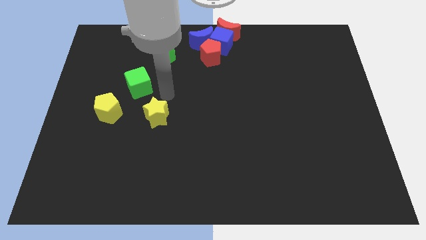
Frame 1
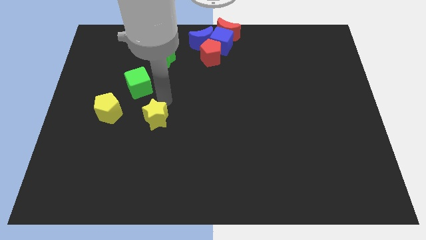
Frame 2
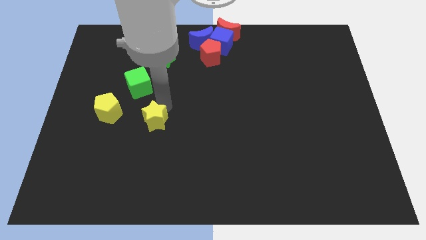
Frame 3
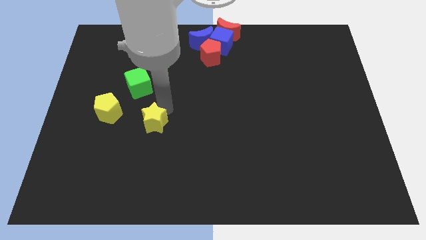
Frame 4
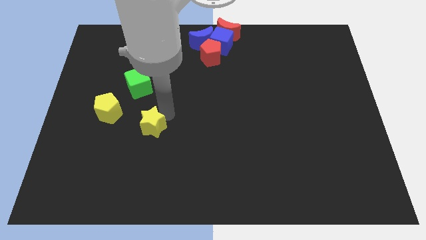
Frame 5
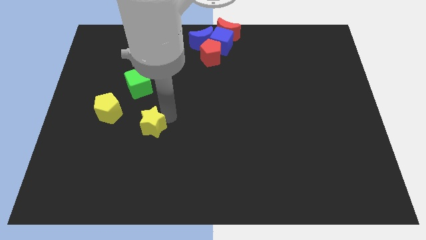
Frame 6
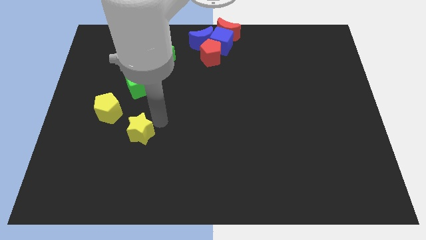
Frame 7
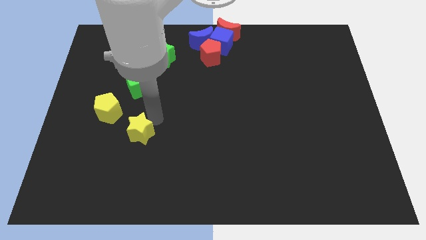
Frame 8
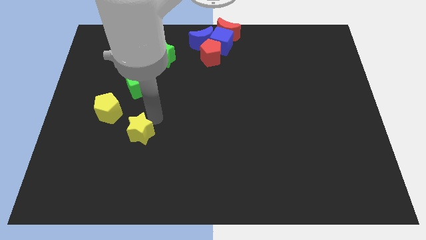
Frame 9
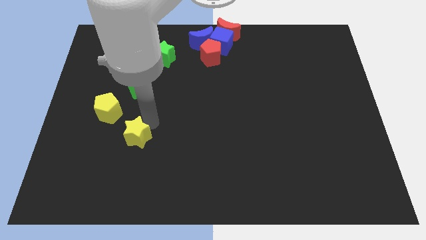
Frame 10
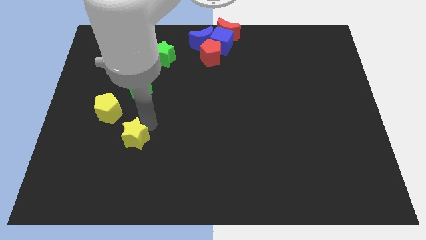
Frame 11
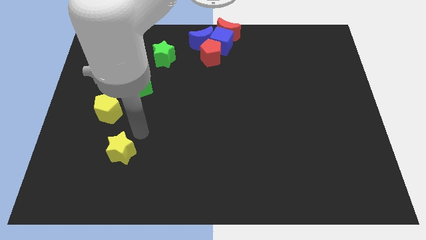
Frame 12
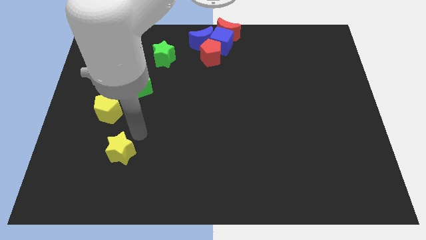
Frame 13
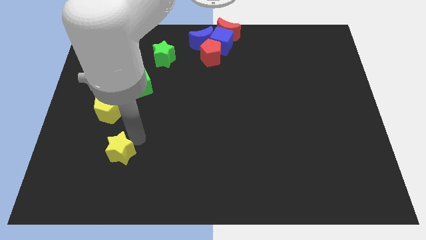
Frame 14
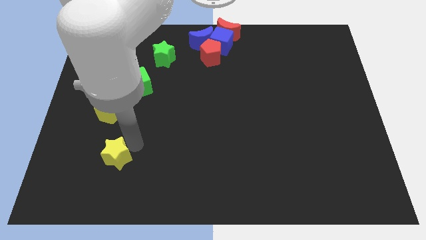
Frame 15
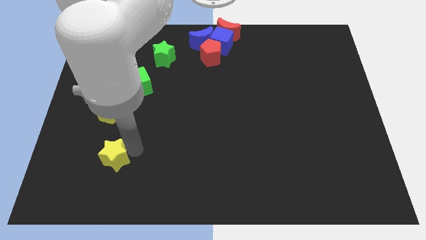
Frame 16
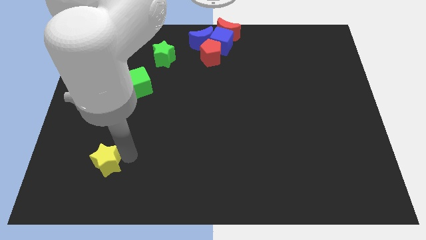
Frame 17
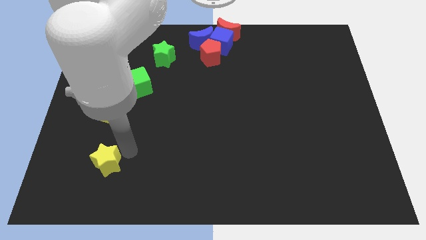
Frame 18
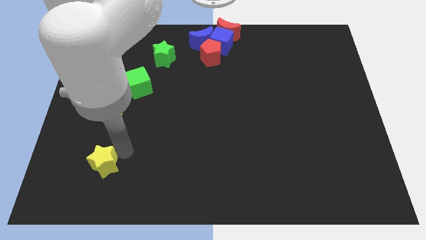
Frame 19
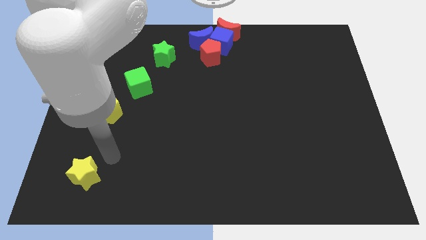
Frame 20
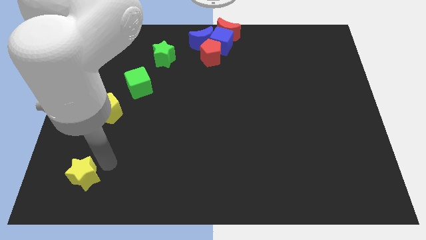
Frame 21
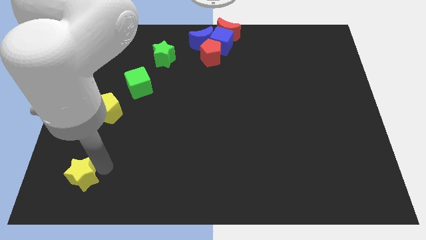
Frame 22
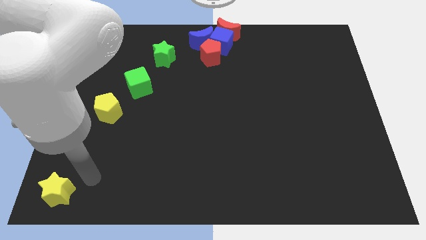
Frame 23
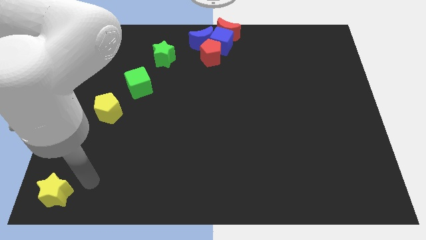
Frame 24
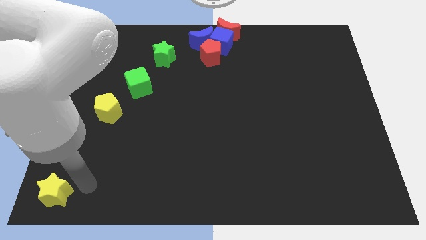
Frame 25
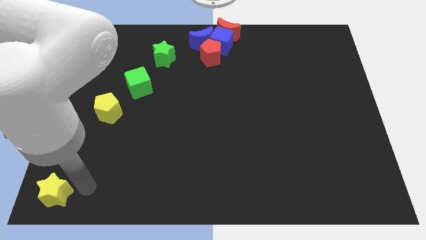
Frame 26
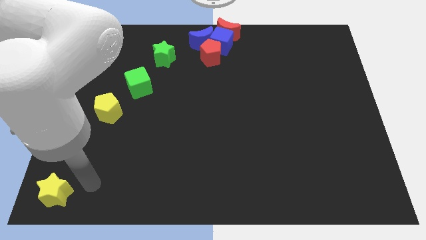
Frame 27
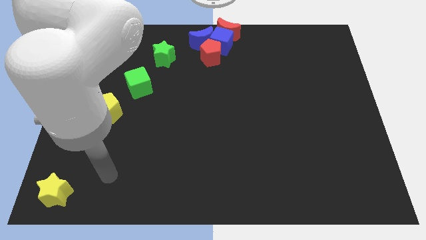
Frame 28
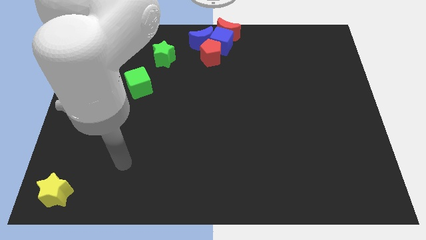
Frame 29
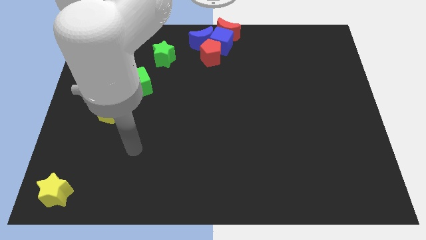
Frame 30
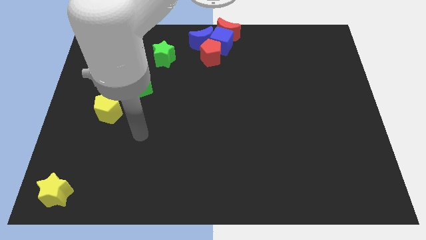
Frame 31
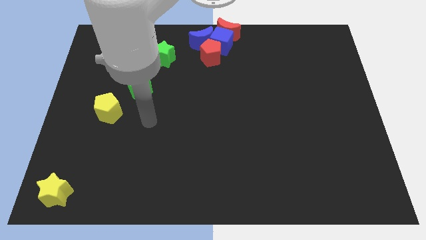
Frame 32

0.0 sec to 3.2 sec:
push the yellopw star at the bottom left side of the table

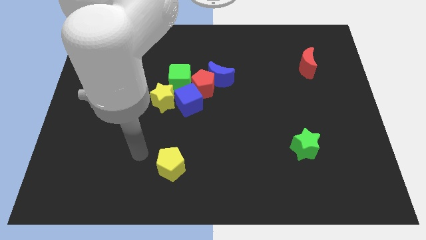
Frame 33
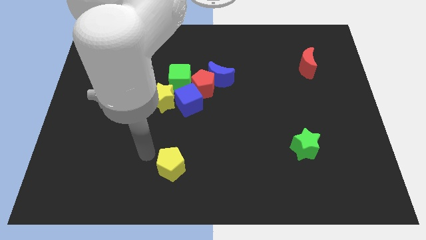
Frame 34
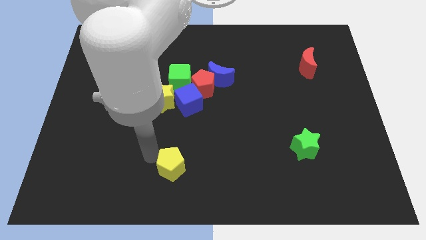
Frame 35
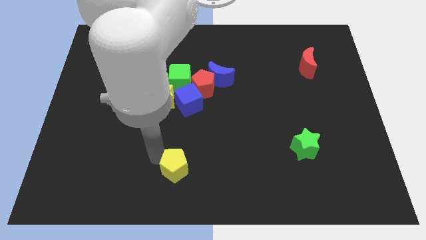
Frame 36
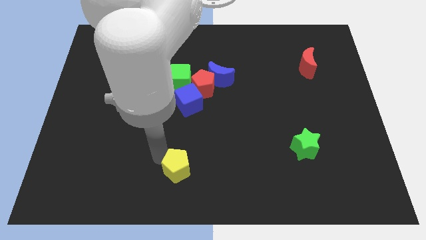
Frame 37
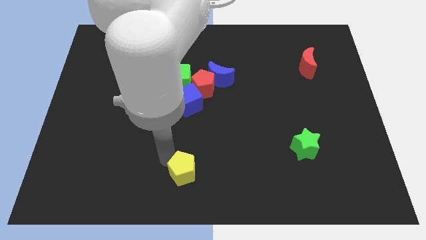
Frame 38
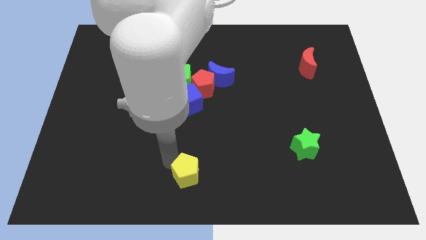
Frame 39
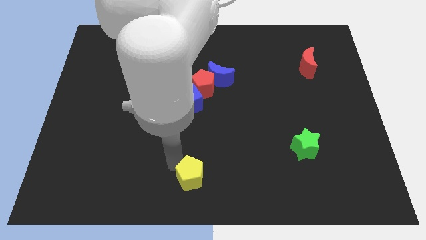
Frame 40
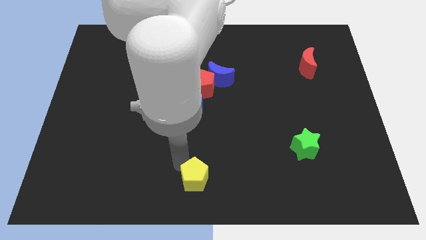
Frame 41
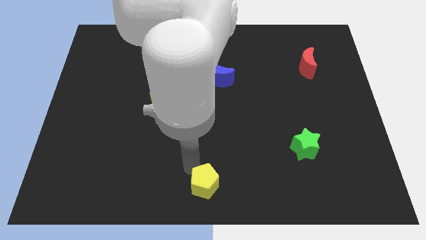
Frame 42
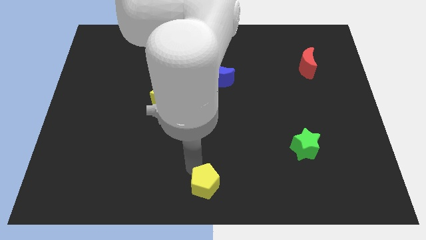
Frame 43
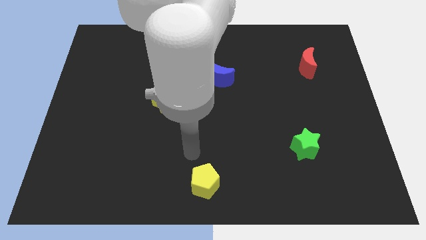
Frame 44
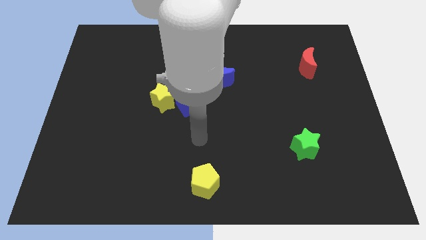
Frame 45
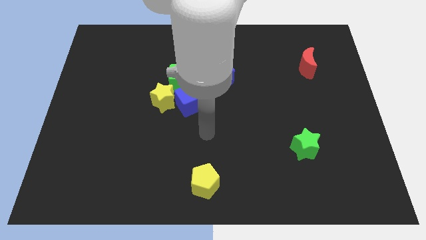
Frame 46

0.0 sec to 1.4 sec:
place the yellow pentagon at the bottom centre of the board

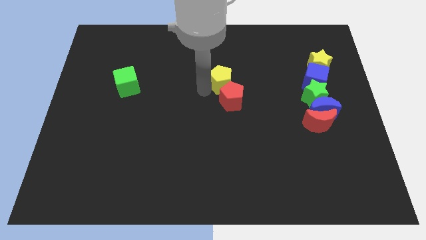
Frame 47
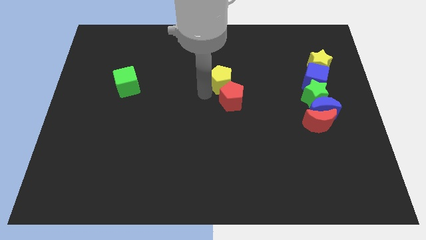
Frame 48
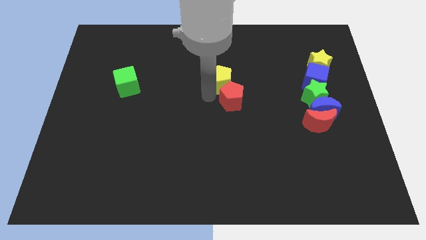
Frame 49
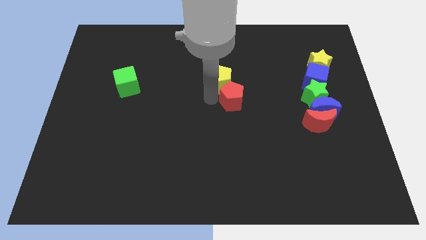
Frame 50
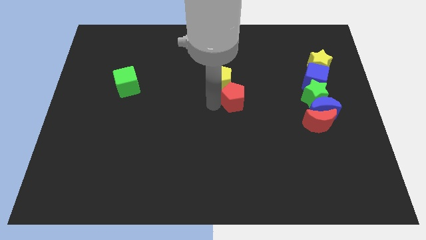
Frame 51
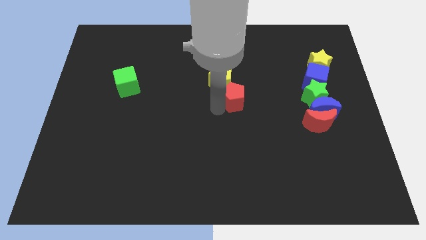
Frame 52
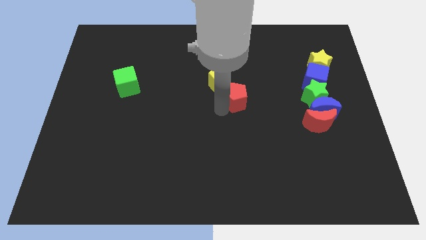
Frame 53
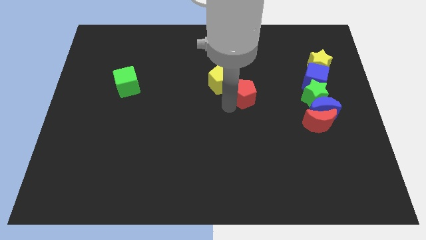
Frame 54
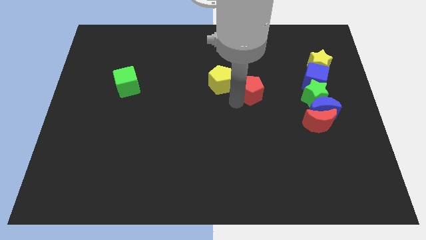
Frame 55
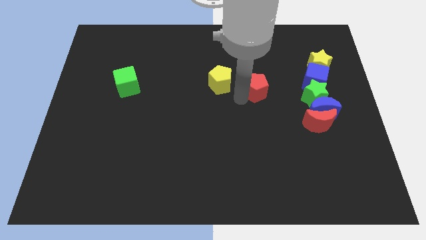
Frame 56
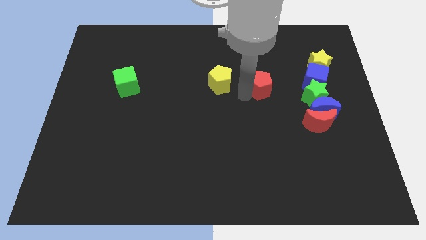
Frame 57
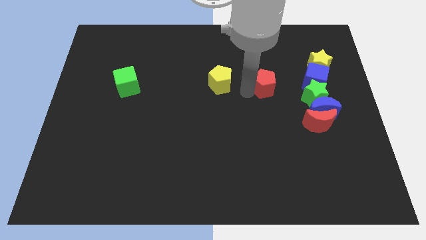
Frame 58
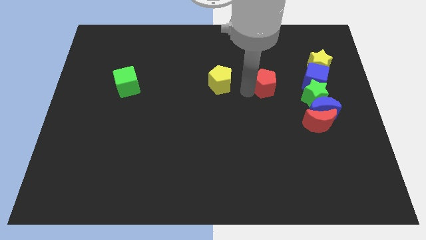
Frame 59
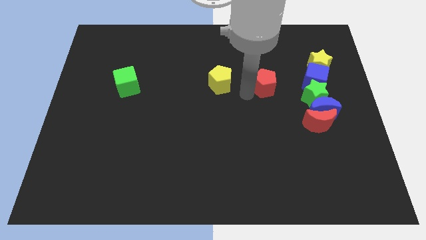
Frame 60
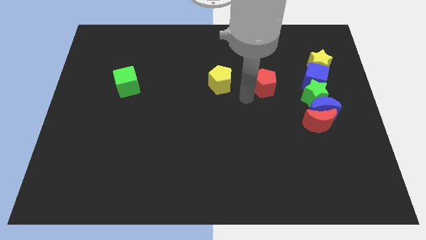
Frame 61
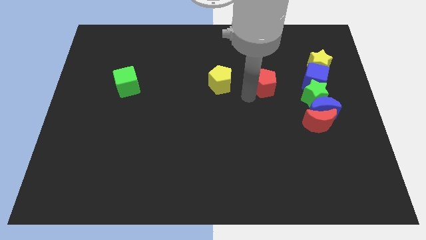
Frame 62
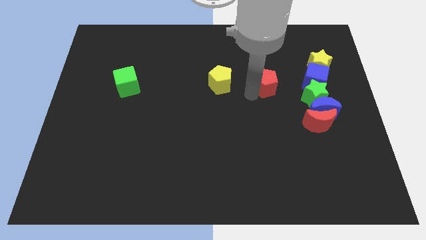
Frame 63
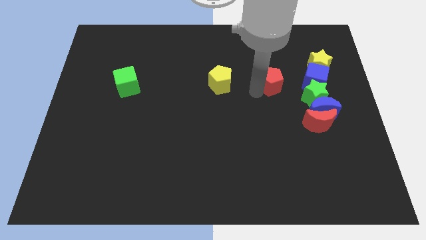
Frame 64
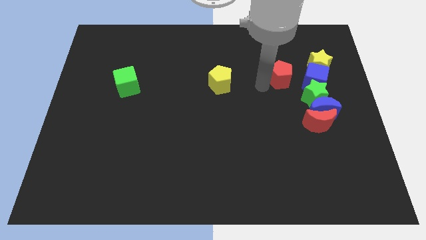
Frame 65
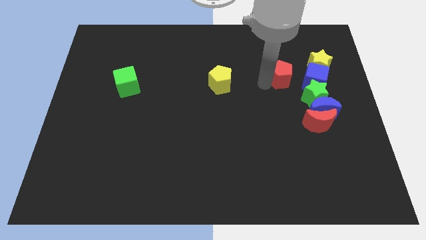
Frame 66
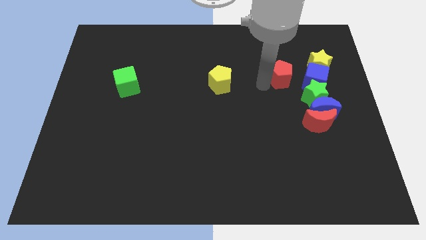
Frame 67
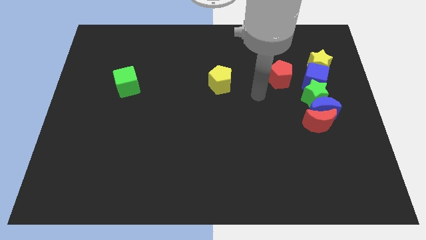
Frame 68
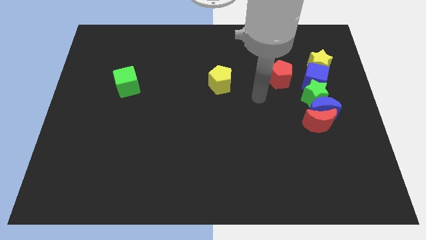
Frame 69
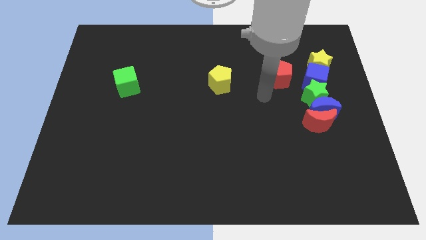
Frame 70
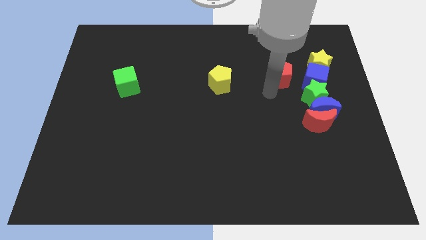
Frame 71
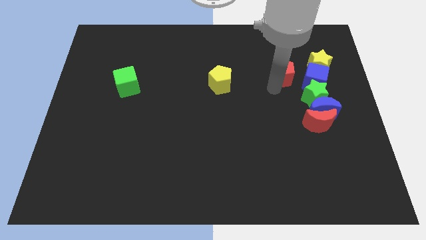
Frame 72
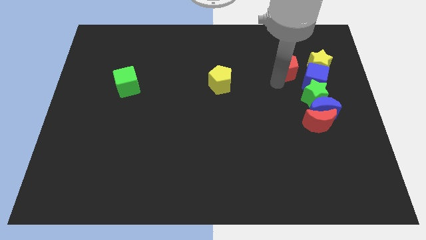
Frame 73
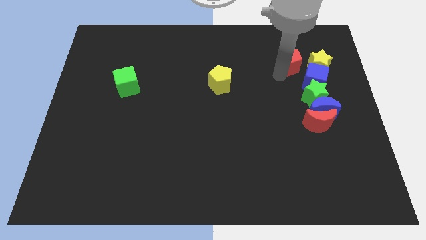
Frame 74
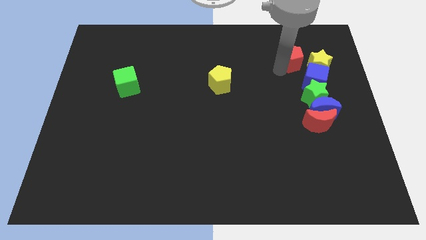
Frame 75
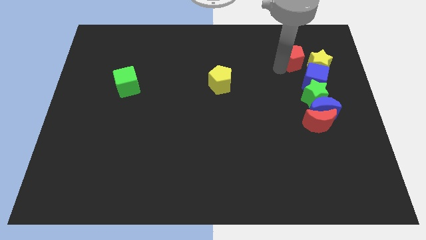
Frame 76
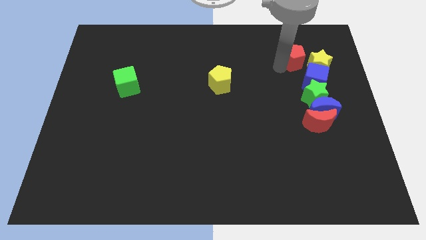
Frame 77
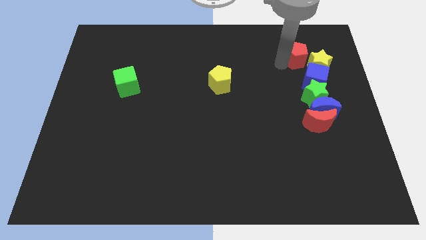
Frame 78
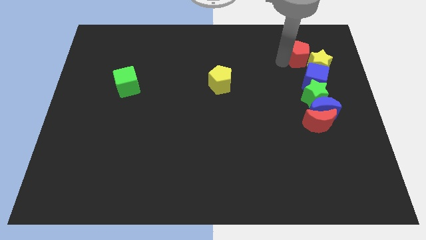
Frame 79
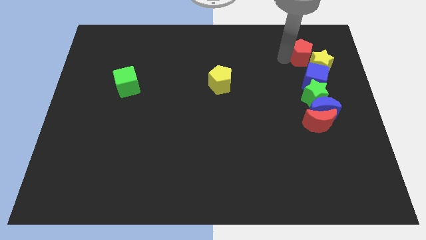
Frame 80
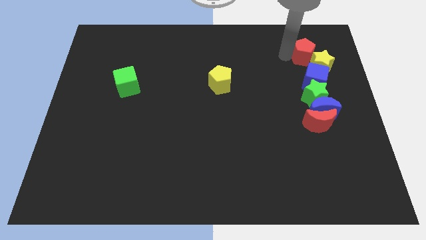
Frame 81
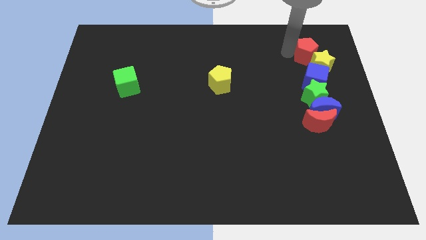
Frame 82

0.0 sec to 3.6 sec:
place the red pentagon towards the top left side of the yellow star

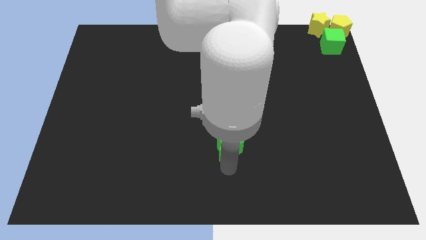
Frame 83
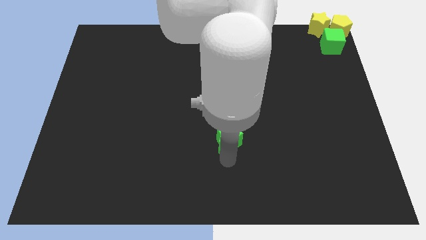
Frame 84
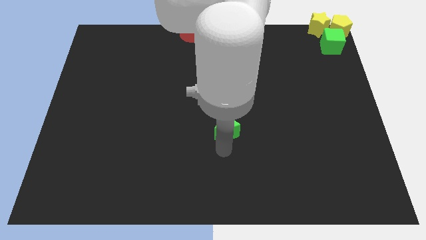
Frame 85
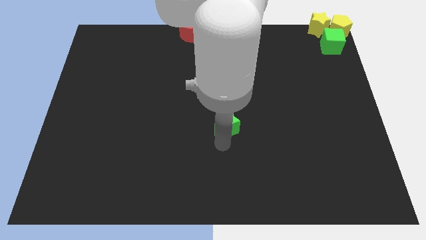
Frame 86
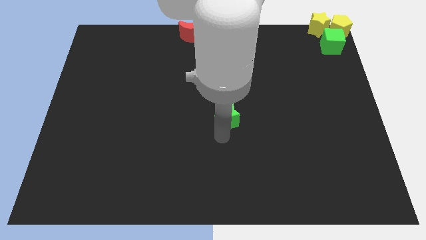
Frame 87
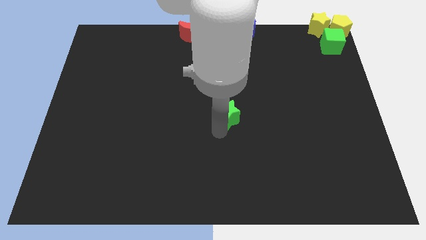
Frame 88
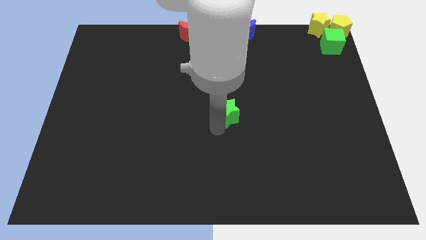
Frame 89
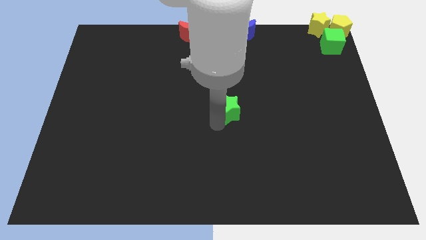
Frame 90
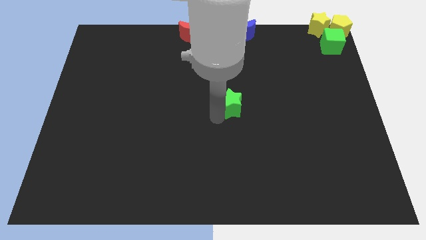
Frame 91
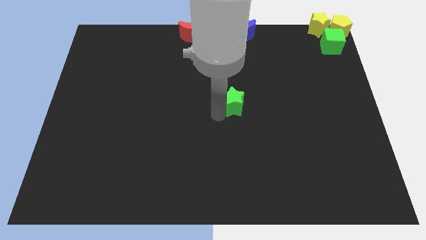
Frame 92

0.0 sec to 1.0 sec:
move the green star to the center of the board
